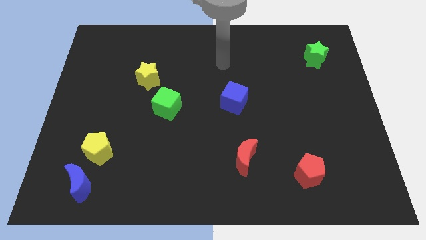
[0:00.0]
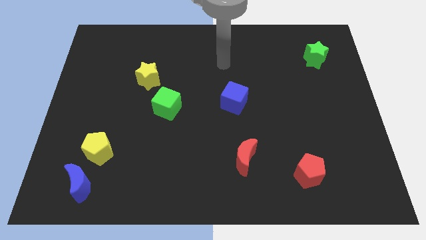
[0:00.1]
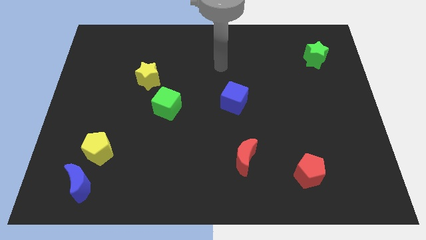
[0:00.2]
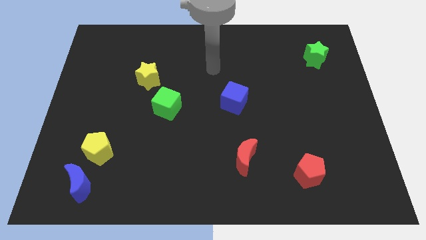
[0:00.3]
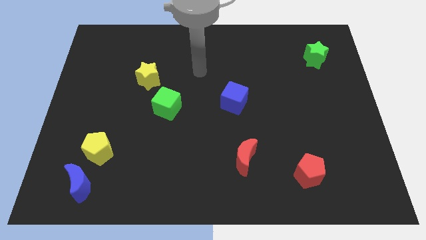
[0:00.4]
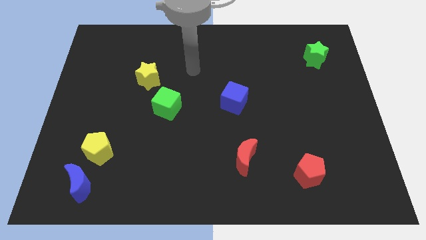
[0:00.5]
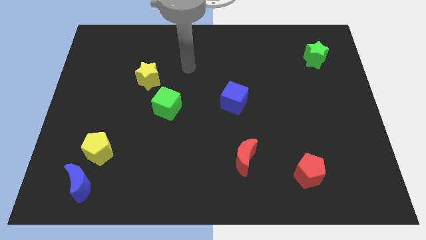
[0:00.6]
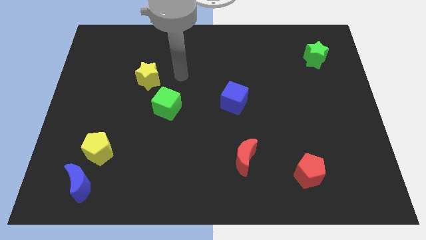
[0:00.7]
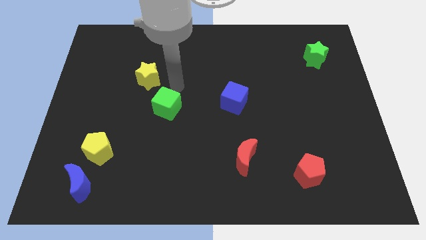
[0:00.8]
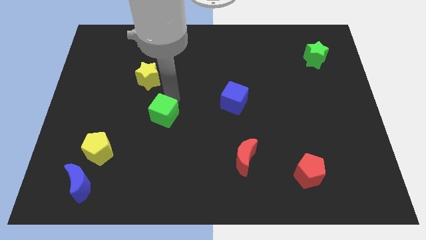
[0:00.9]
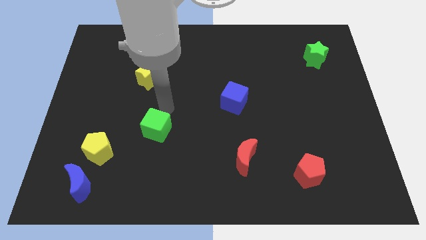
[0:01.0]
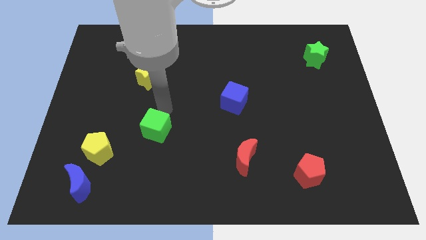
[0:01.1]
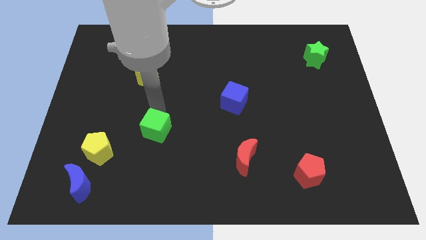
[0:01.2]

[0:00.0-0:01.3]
touch the green cube

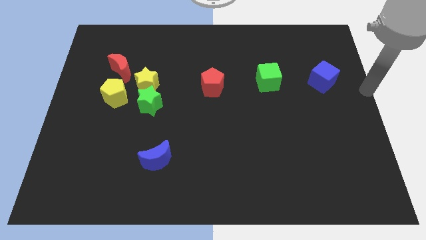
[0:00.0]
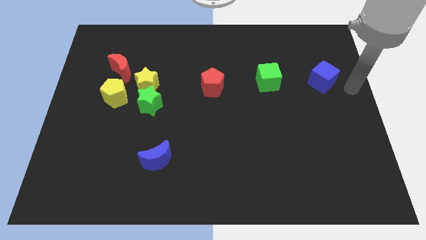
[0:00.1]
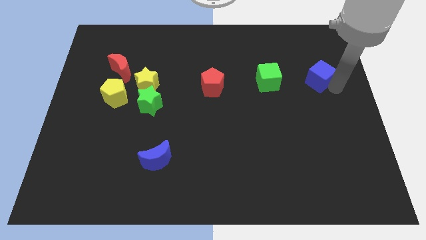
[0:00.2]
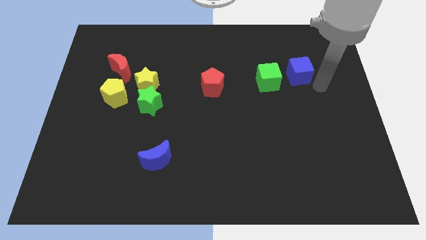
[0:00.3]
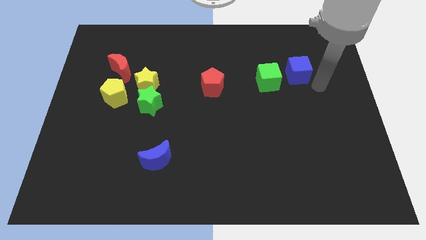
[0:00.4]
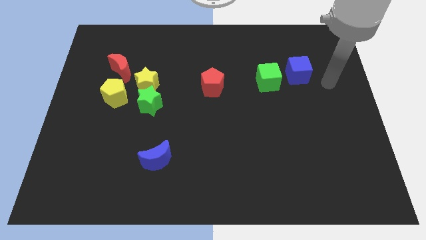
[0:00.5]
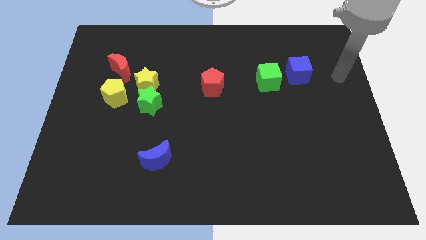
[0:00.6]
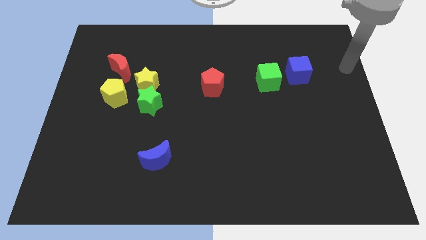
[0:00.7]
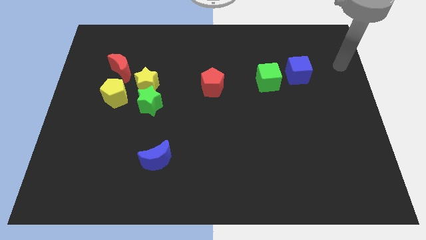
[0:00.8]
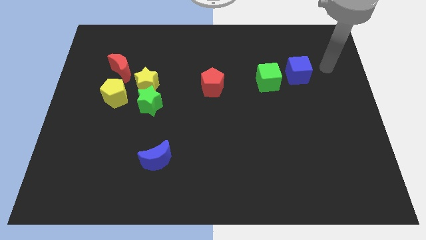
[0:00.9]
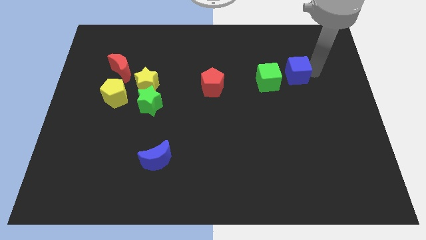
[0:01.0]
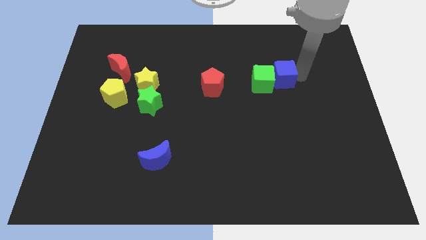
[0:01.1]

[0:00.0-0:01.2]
move blue cube to the right of green cube

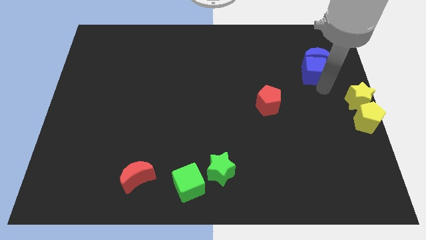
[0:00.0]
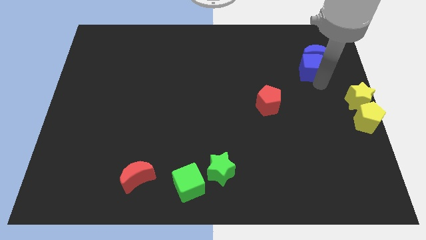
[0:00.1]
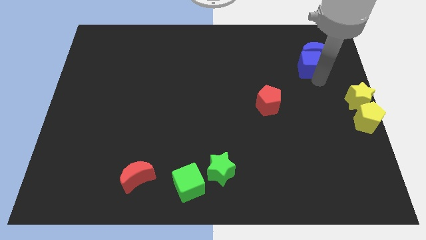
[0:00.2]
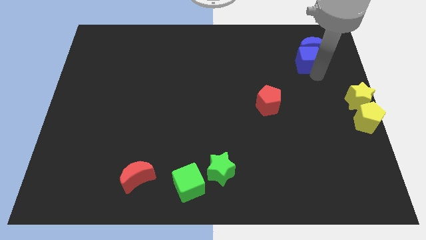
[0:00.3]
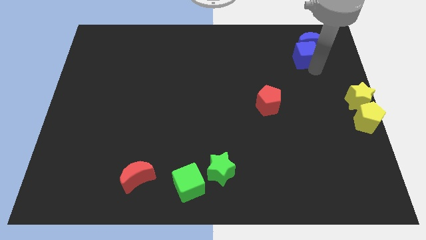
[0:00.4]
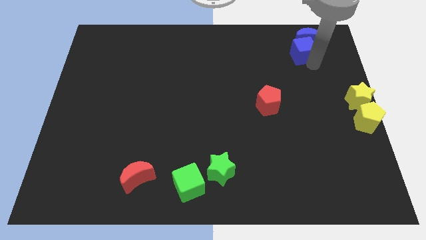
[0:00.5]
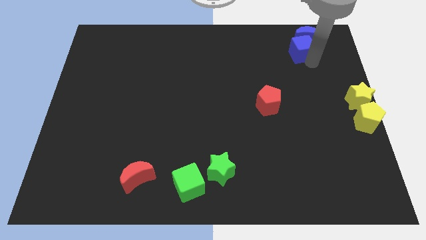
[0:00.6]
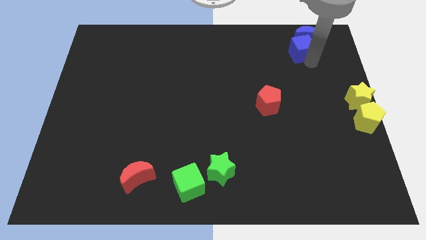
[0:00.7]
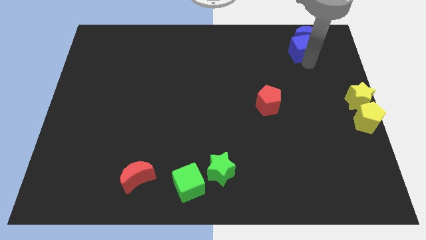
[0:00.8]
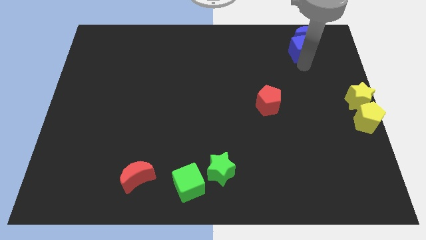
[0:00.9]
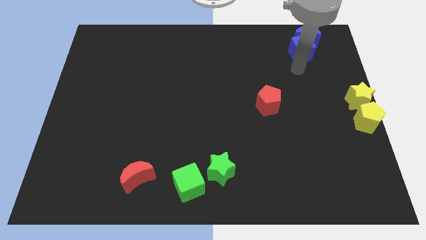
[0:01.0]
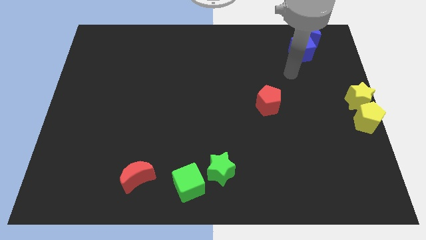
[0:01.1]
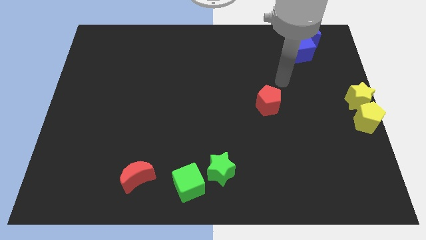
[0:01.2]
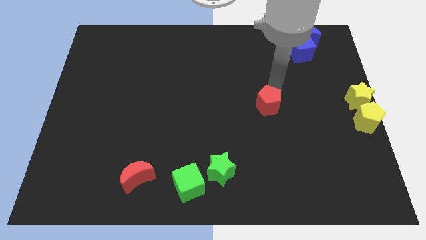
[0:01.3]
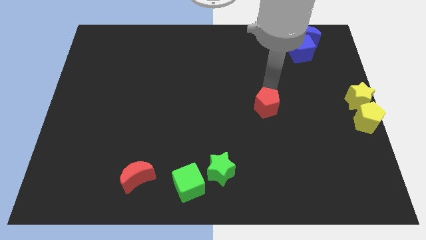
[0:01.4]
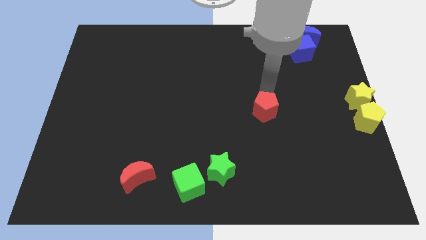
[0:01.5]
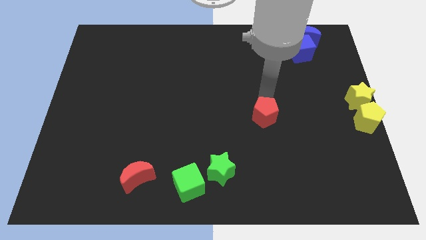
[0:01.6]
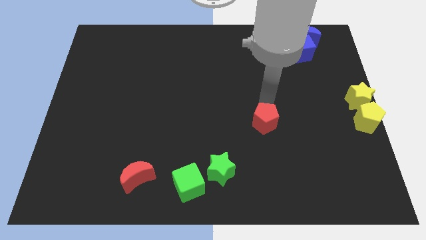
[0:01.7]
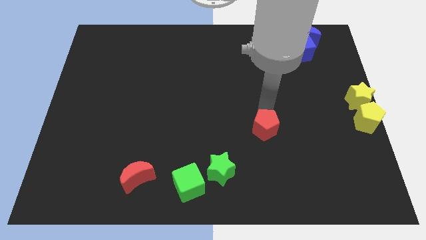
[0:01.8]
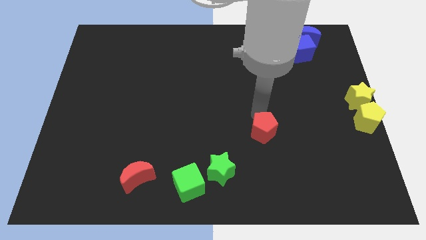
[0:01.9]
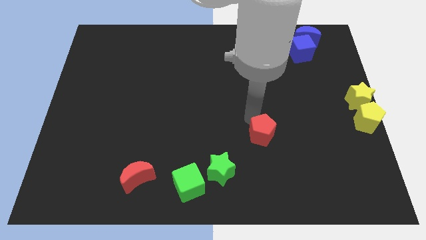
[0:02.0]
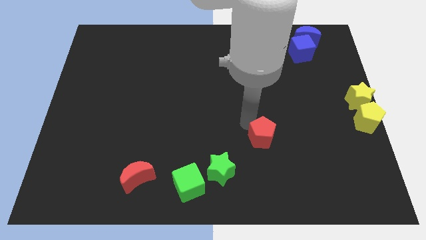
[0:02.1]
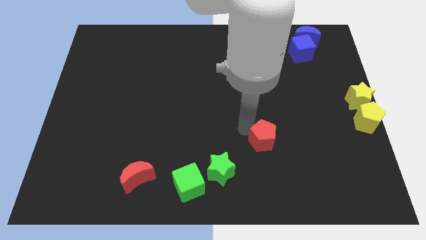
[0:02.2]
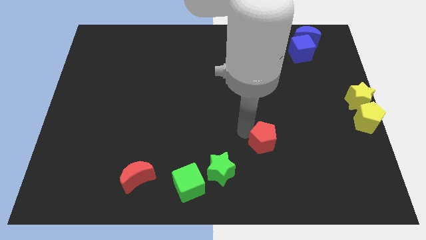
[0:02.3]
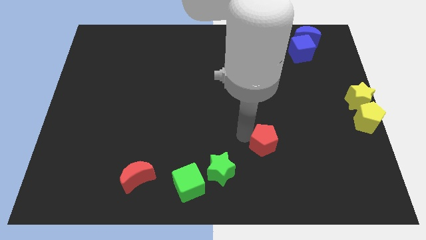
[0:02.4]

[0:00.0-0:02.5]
push the blue blocks to top right side of the board

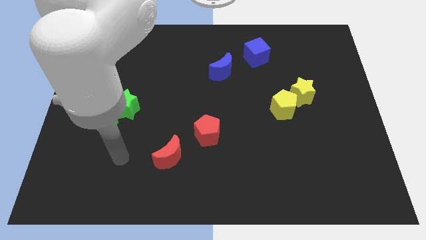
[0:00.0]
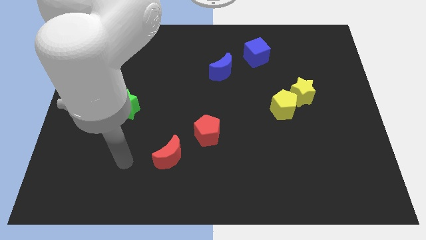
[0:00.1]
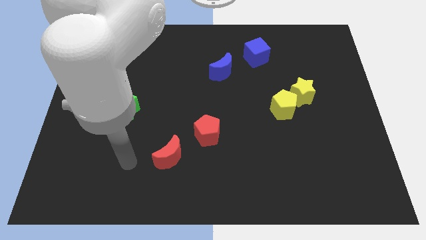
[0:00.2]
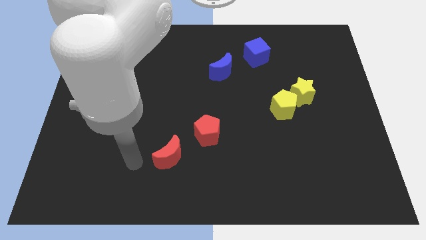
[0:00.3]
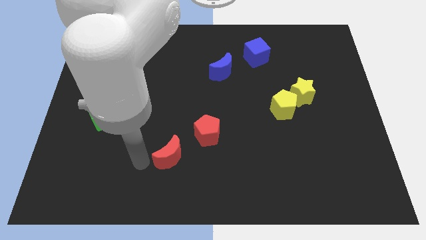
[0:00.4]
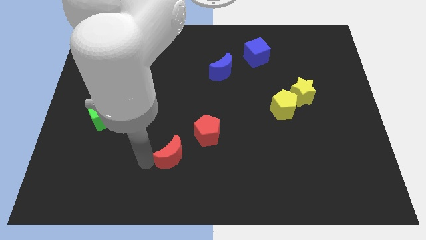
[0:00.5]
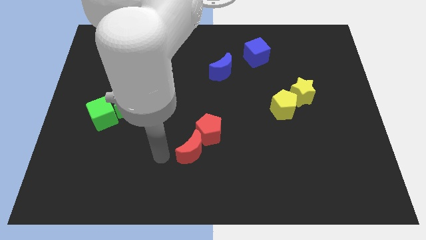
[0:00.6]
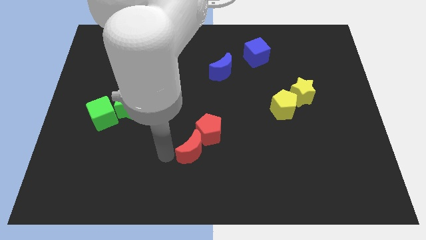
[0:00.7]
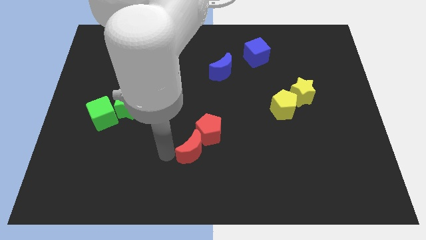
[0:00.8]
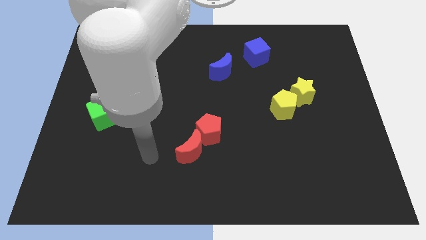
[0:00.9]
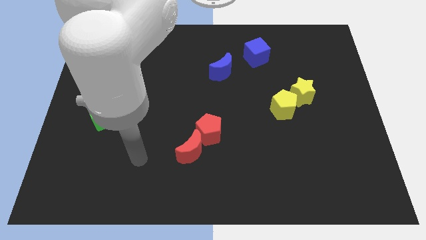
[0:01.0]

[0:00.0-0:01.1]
push the red moon into the red pentagon

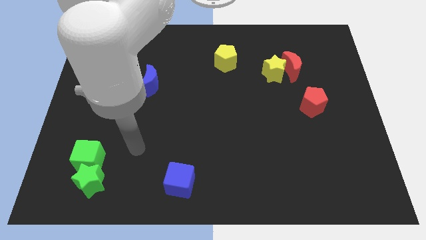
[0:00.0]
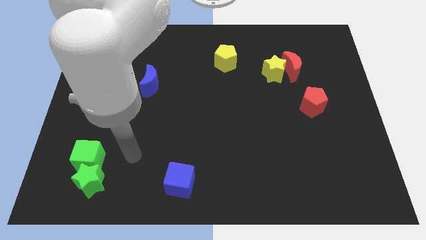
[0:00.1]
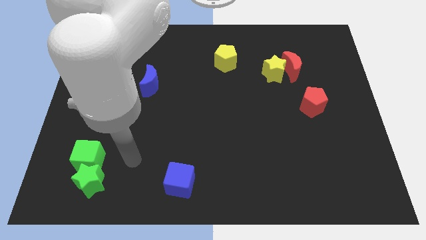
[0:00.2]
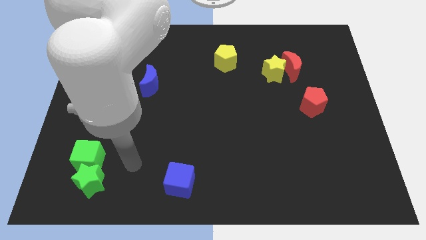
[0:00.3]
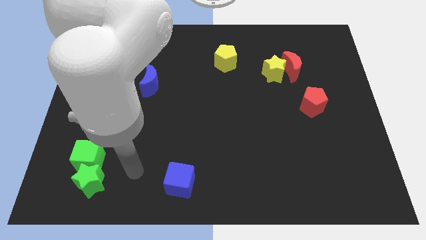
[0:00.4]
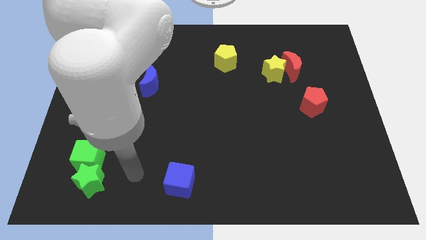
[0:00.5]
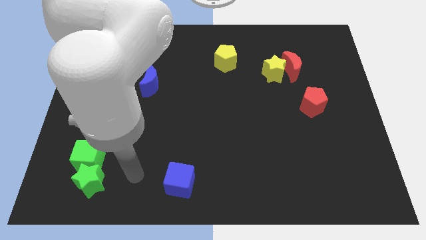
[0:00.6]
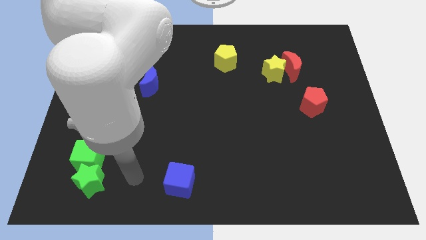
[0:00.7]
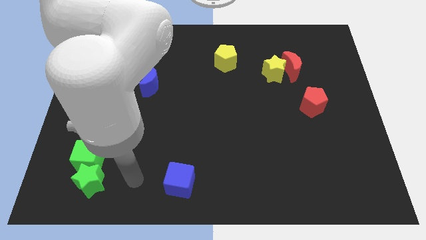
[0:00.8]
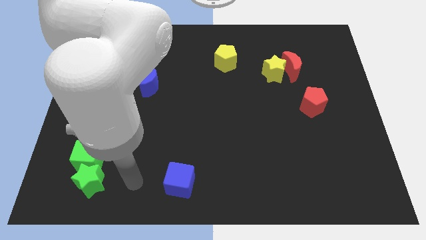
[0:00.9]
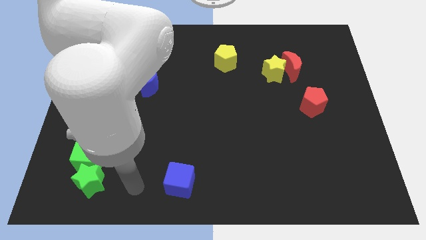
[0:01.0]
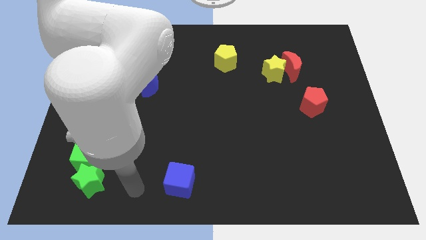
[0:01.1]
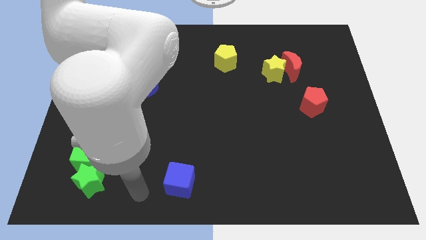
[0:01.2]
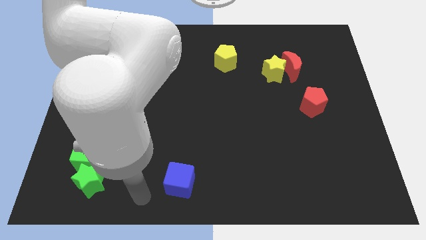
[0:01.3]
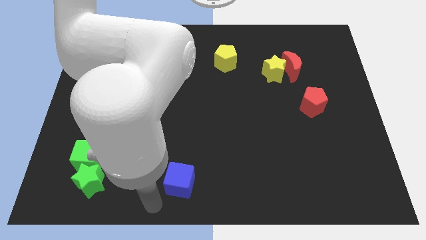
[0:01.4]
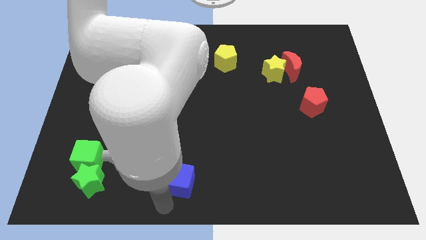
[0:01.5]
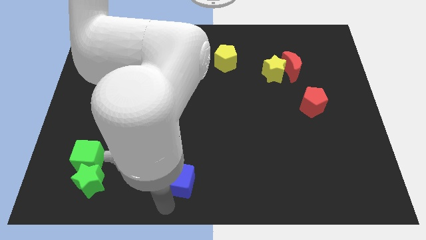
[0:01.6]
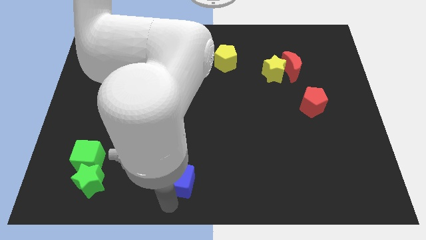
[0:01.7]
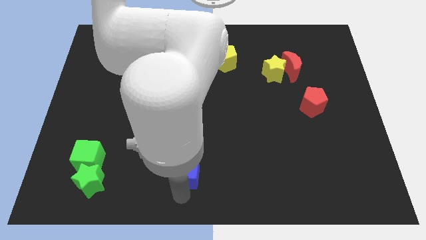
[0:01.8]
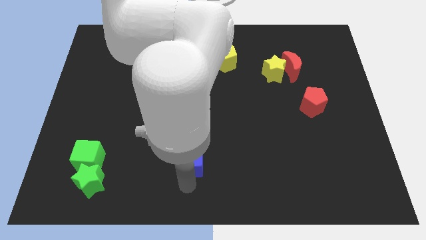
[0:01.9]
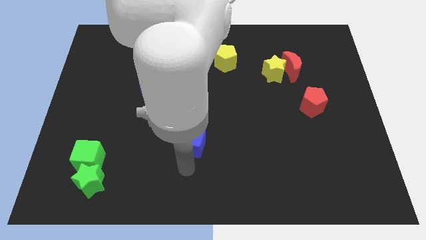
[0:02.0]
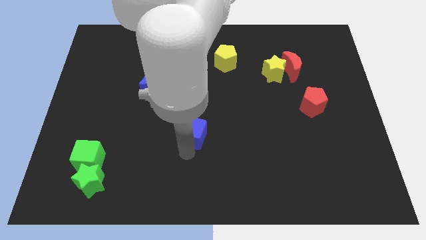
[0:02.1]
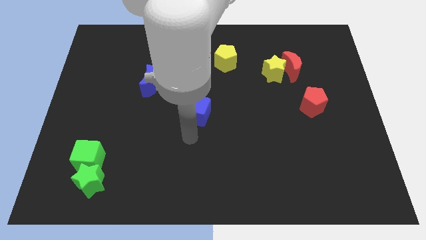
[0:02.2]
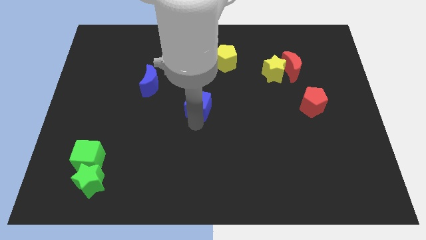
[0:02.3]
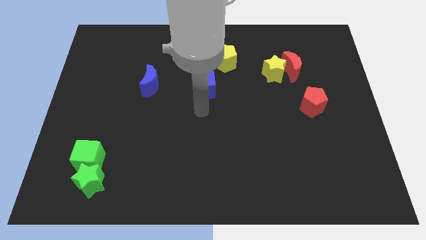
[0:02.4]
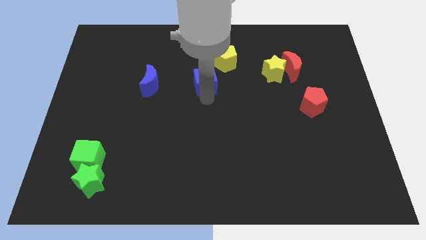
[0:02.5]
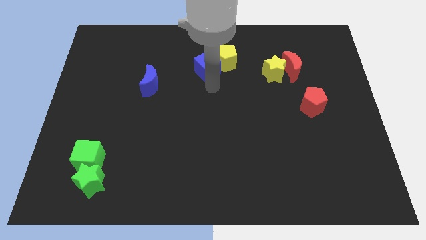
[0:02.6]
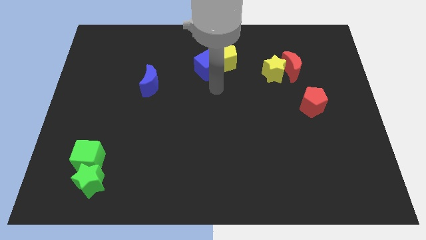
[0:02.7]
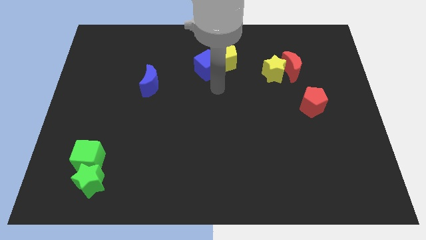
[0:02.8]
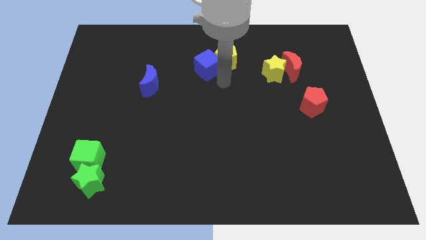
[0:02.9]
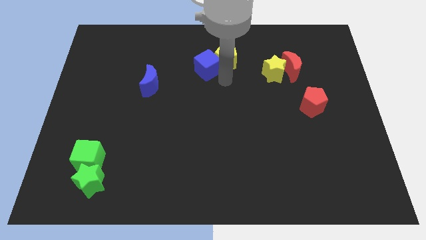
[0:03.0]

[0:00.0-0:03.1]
push the blue cube into the yellow pentagon
